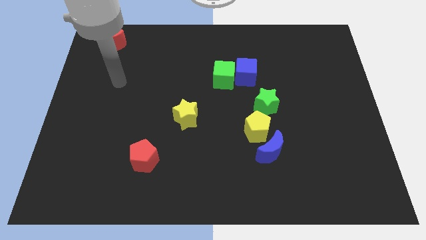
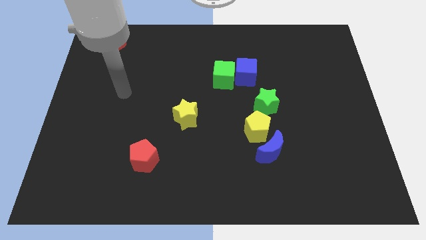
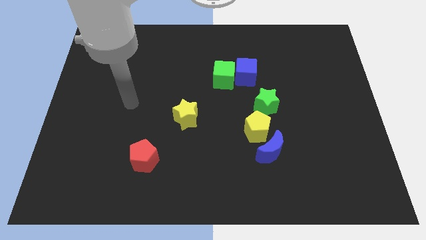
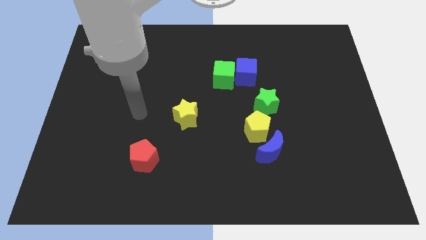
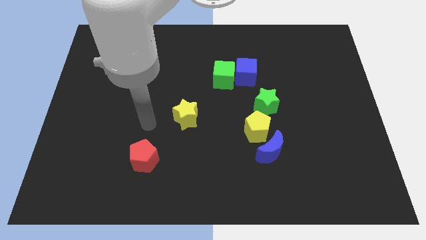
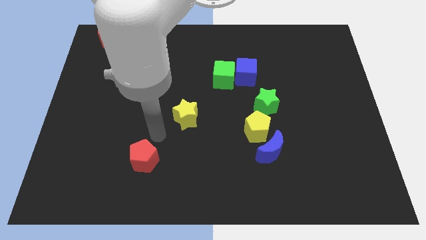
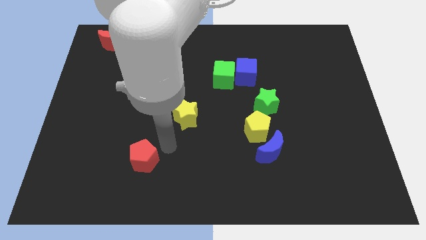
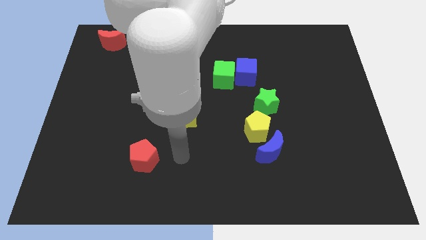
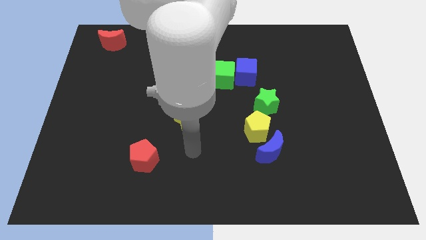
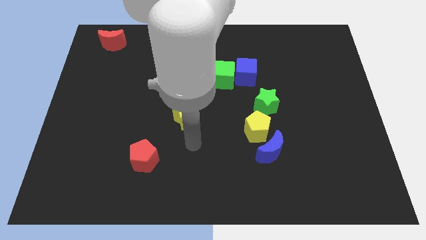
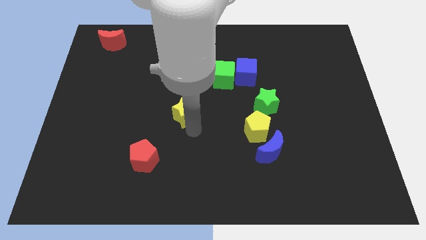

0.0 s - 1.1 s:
move your hand to the bottom of the yellow star

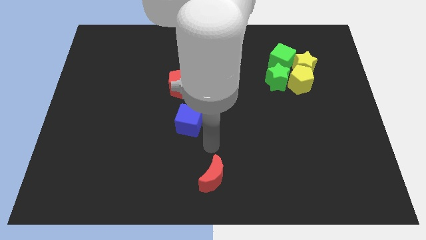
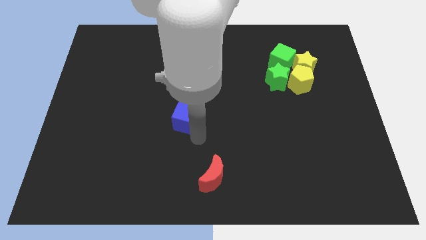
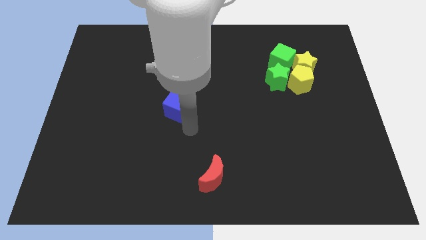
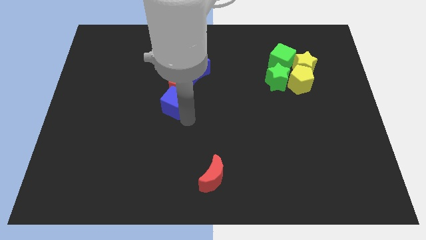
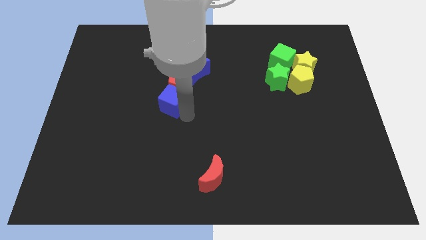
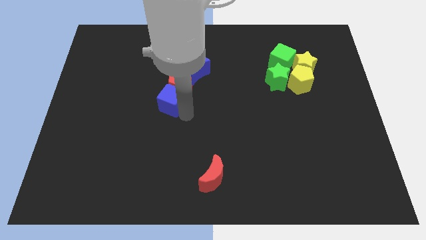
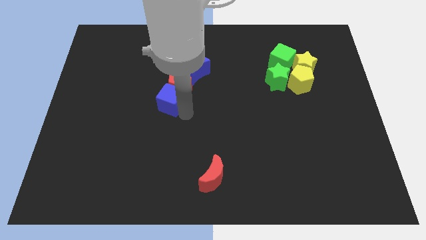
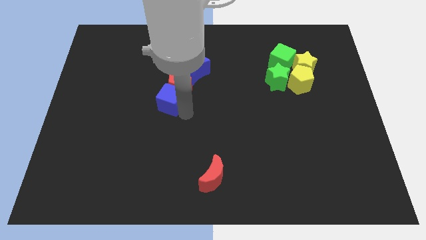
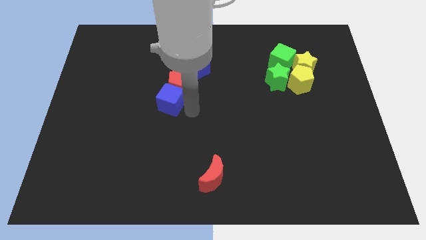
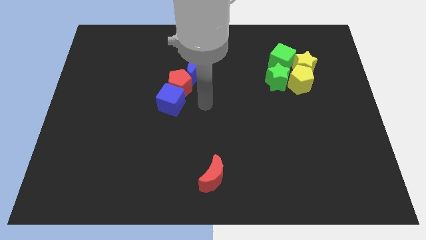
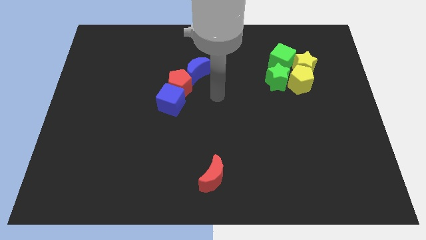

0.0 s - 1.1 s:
move the blue cube left to the red pentagon

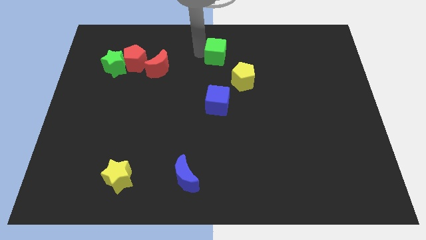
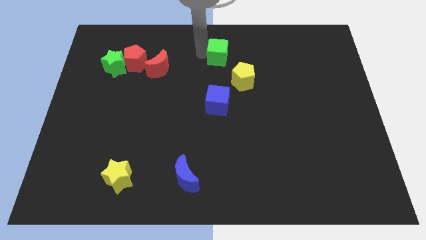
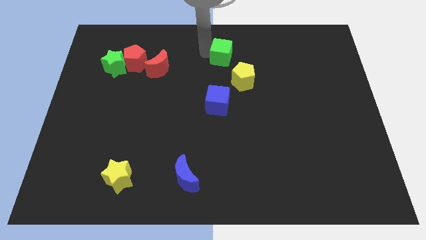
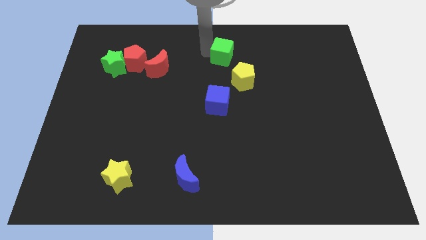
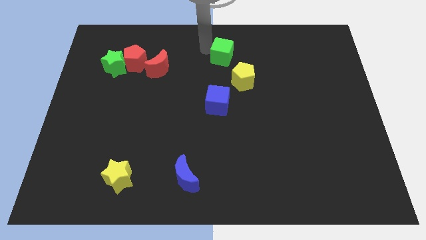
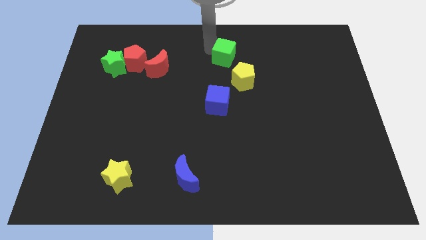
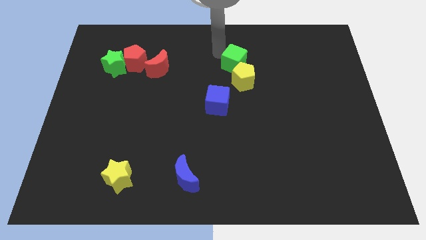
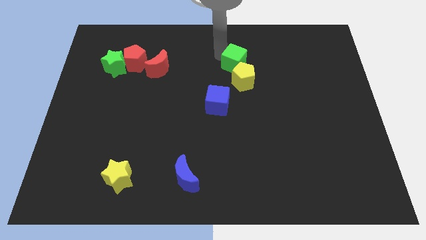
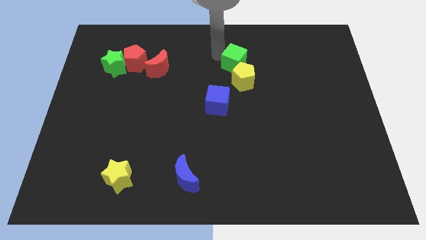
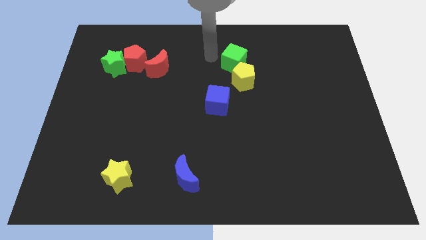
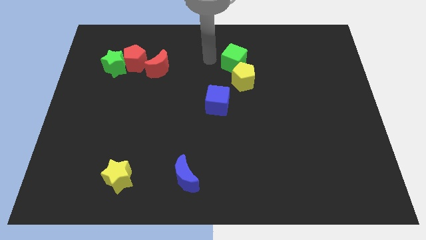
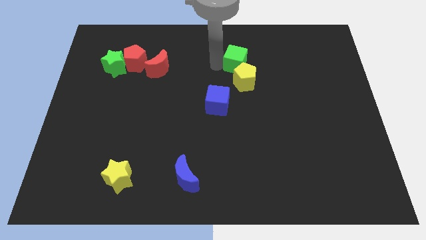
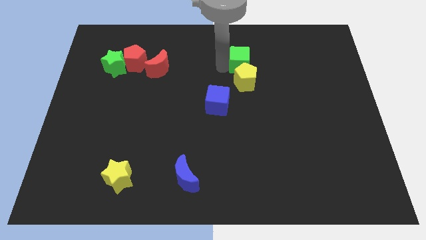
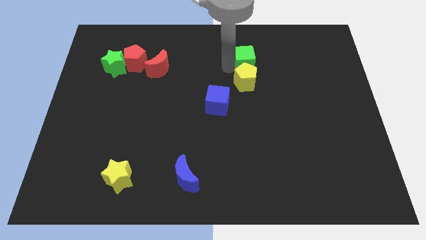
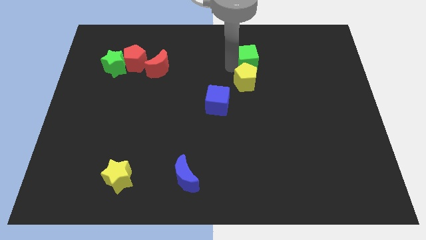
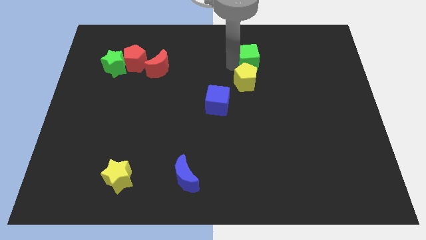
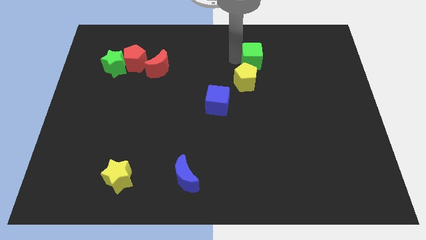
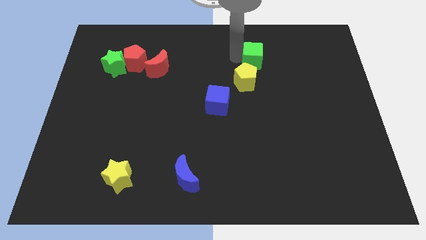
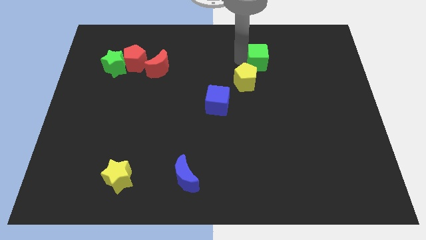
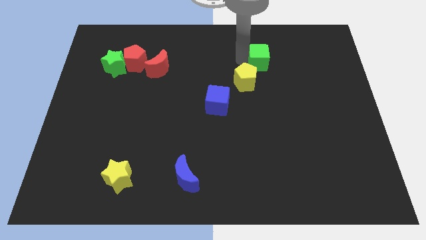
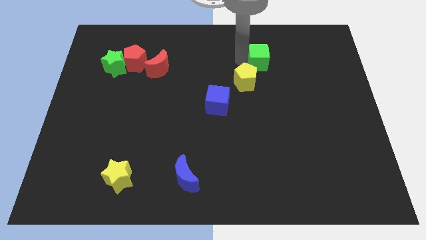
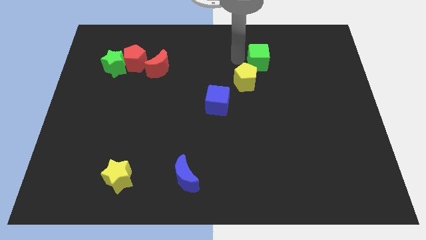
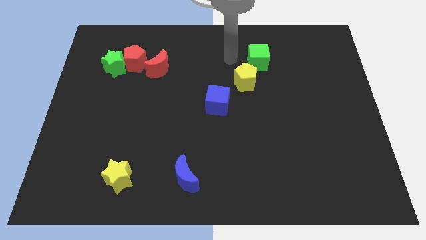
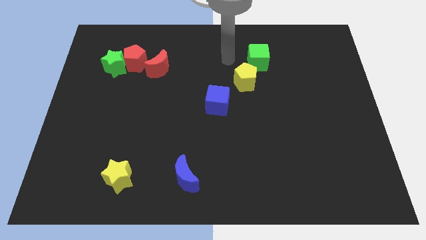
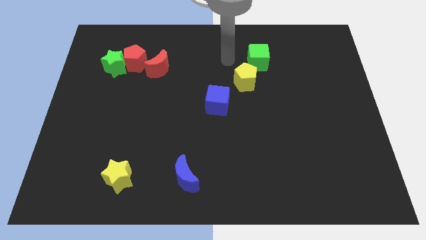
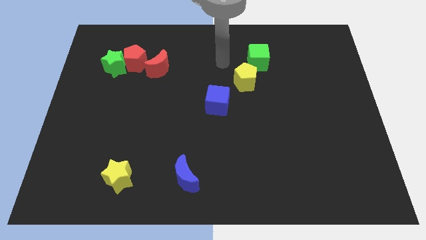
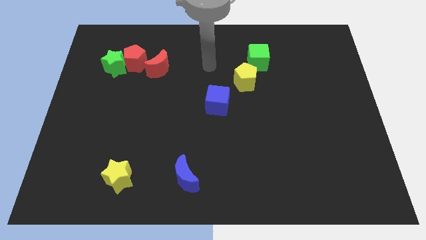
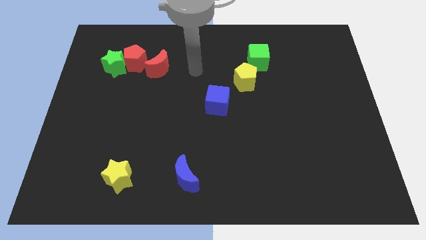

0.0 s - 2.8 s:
move the green cube to the top right of the yellow pentagon

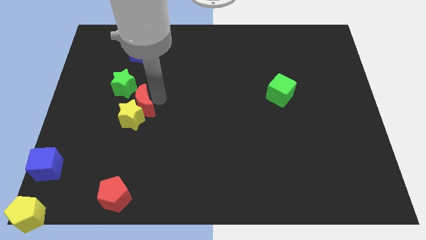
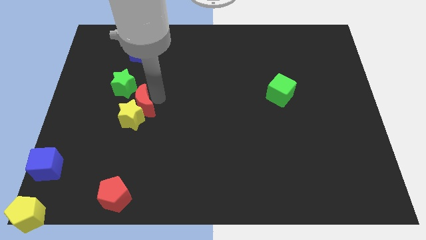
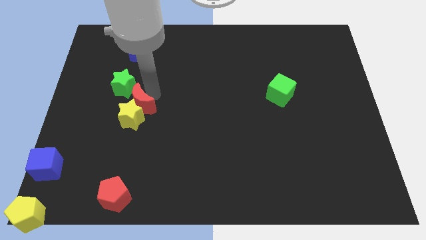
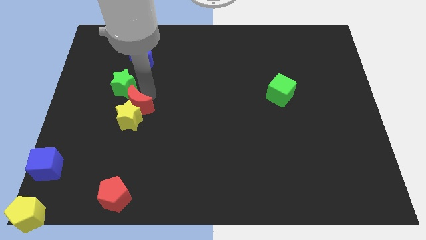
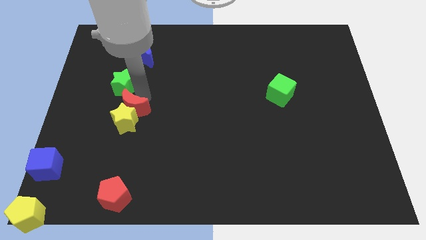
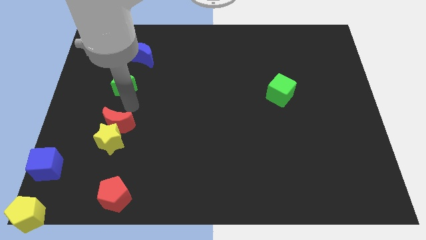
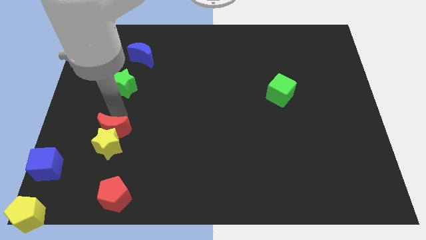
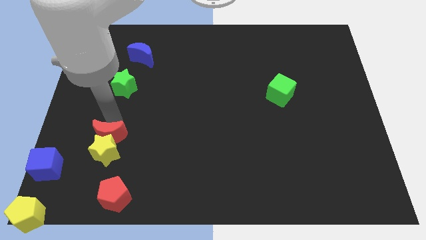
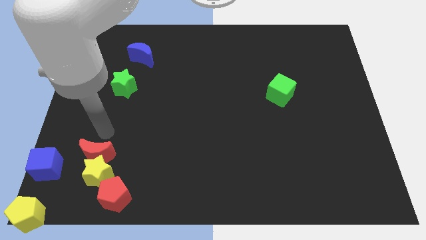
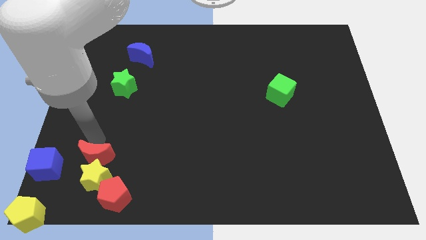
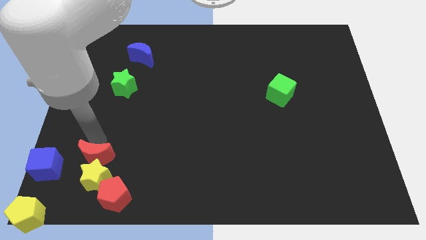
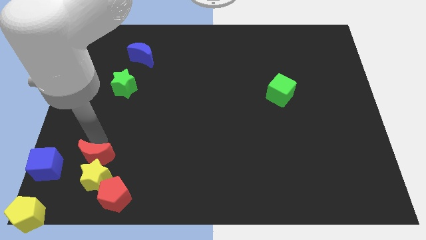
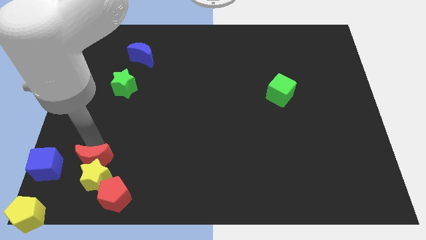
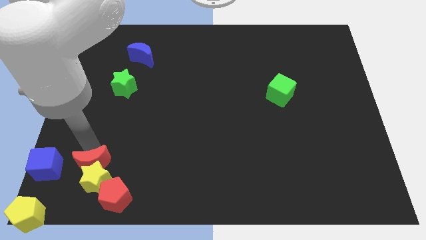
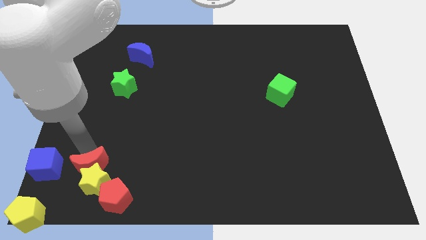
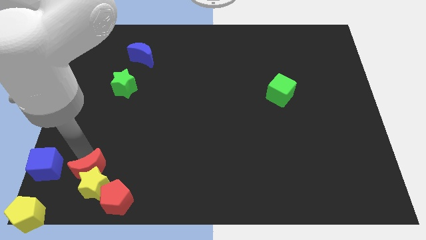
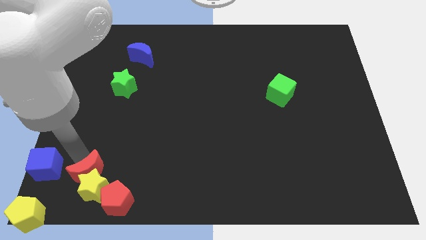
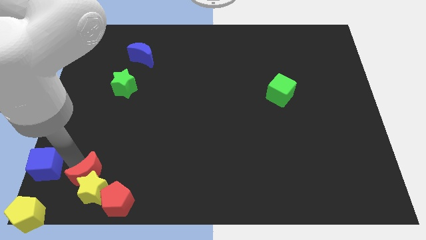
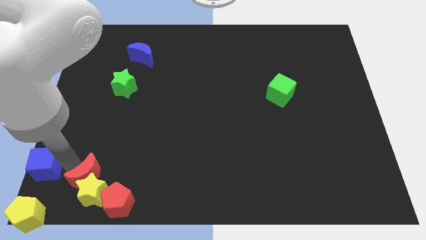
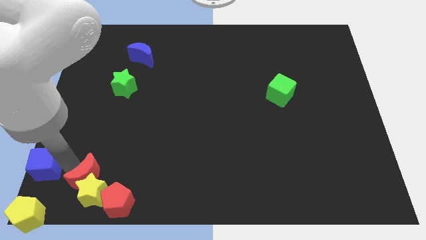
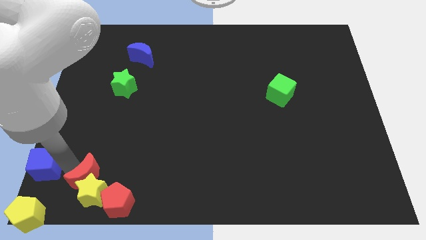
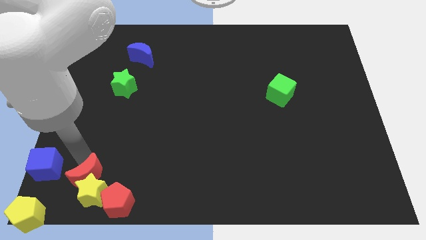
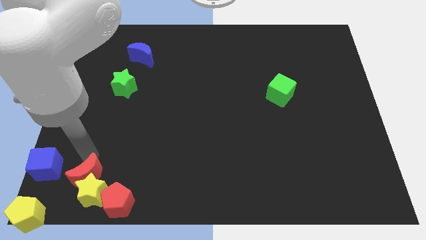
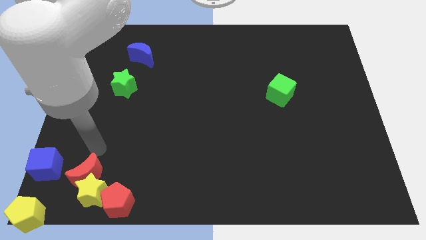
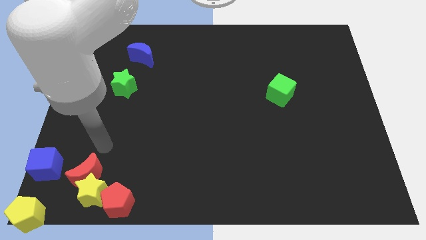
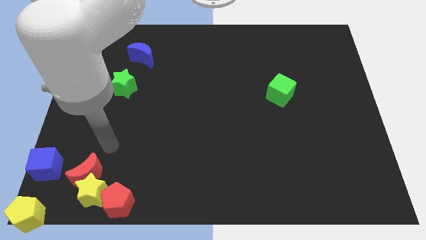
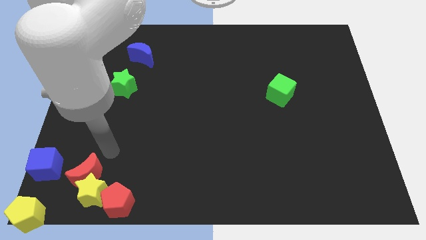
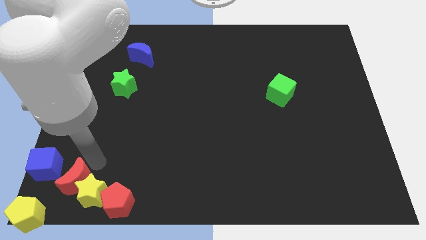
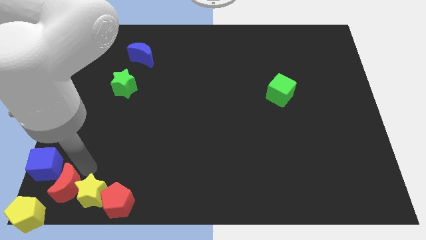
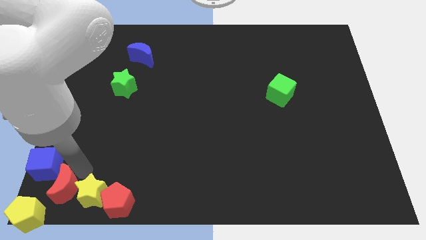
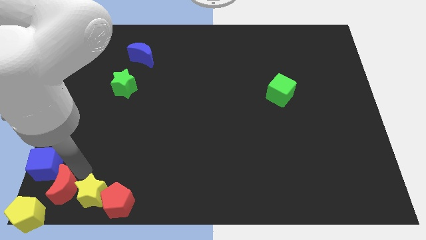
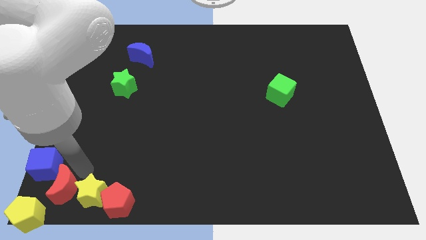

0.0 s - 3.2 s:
move red moon with yellow star in between the blue cube and red pentagon

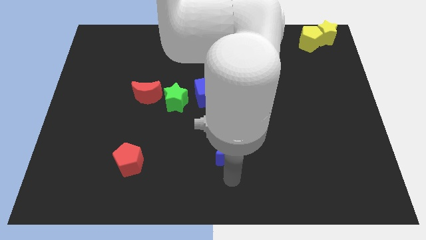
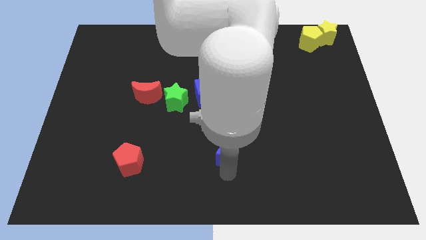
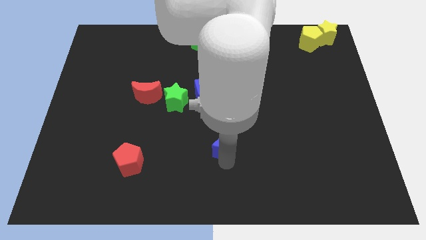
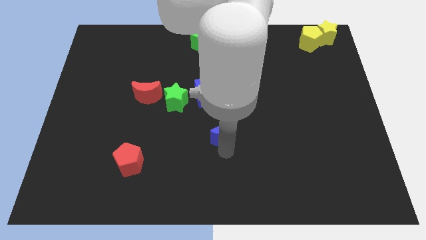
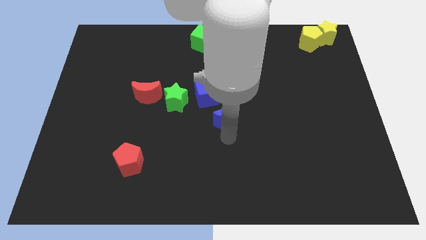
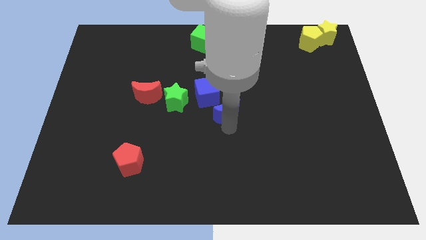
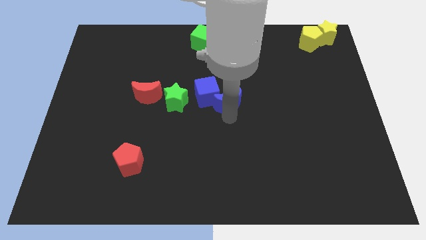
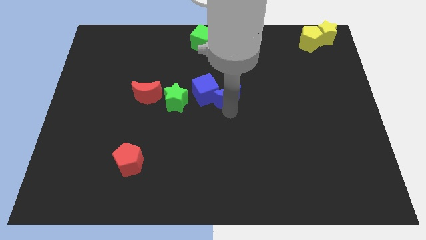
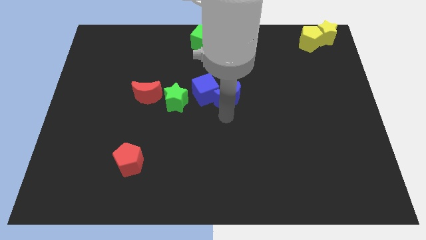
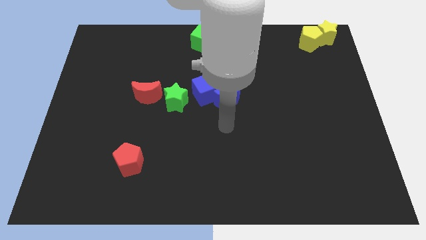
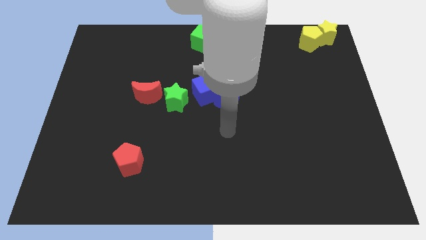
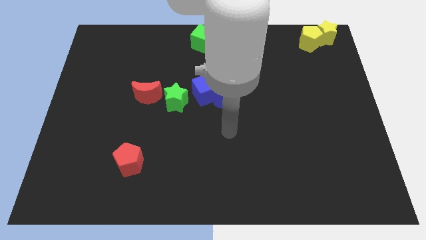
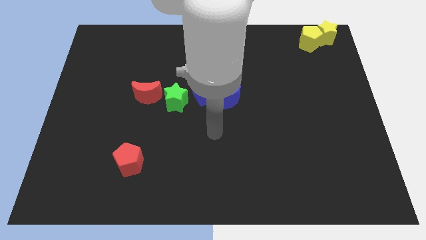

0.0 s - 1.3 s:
push blue crescent into the blue cube
